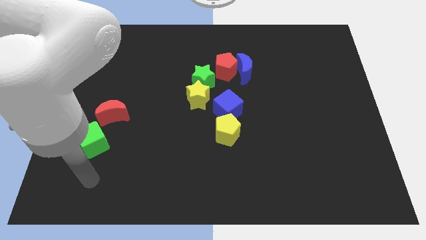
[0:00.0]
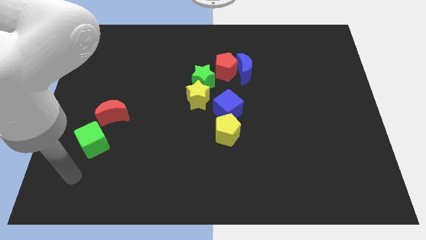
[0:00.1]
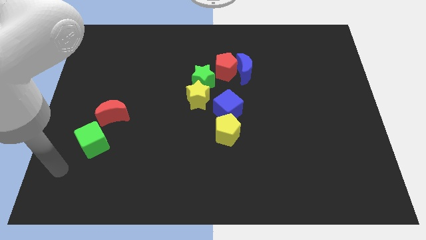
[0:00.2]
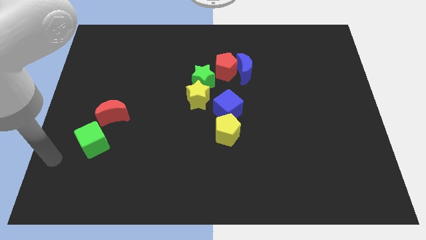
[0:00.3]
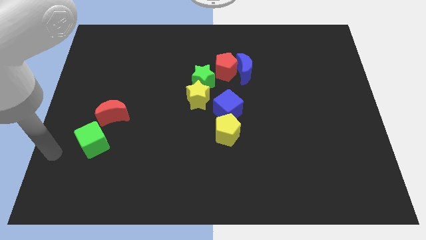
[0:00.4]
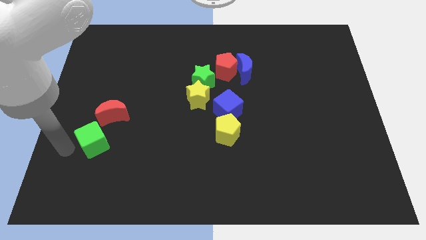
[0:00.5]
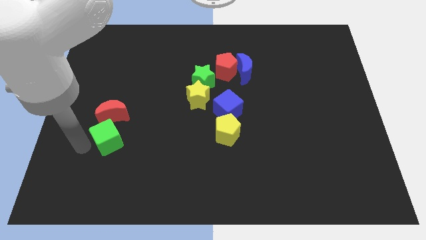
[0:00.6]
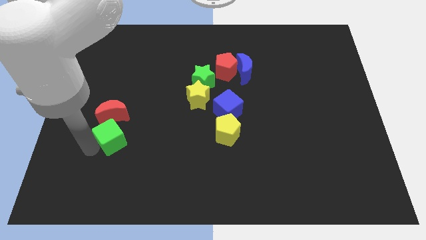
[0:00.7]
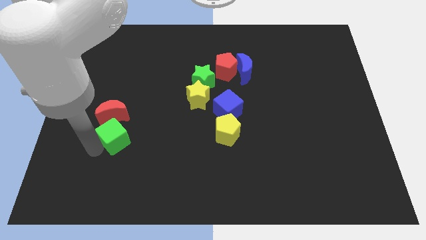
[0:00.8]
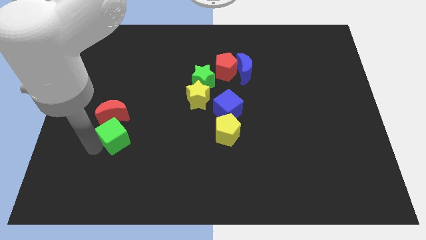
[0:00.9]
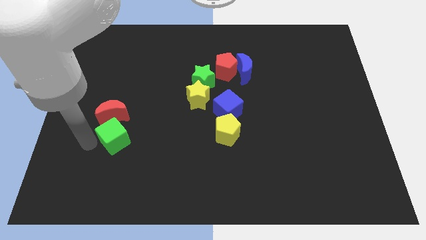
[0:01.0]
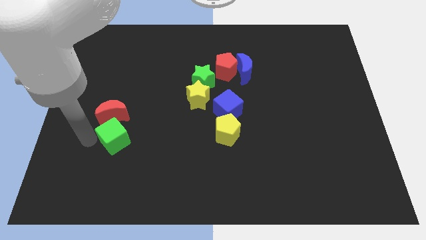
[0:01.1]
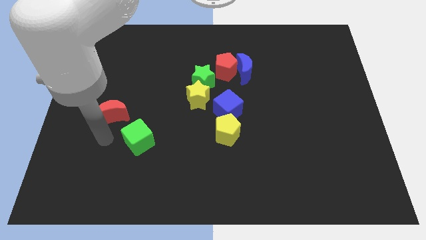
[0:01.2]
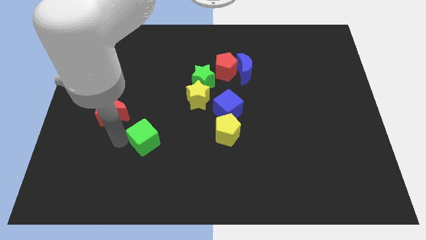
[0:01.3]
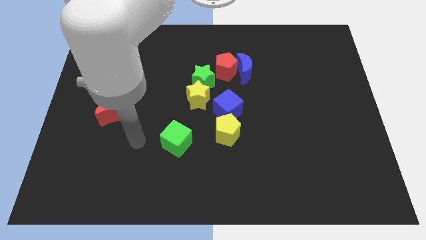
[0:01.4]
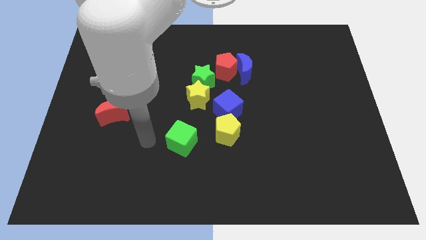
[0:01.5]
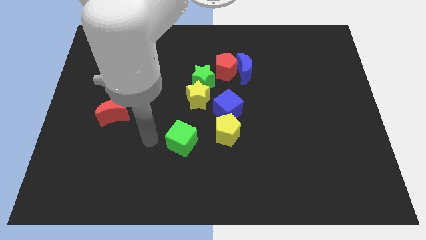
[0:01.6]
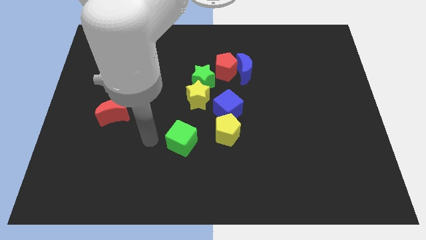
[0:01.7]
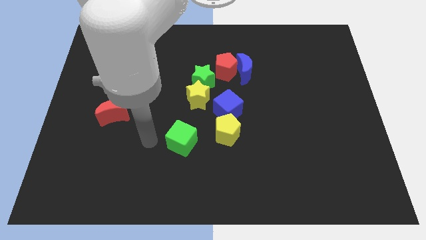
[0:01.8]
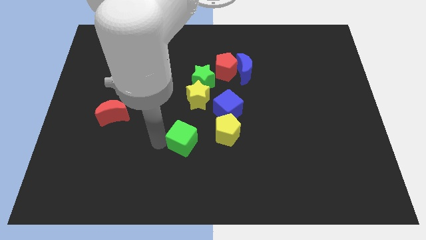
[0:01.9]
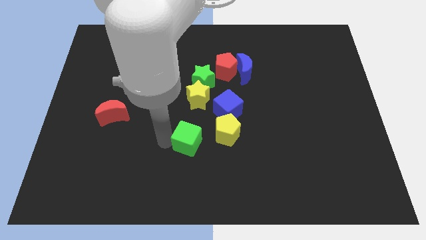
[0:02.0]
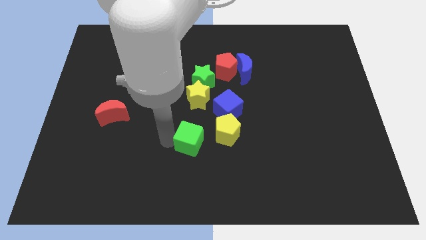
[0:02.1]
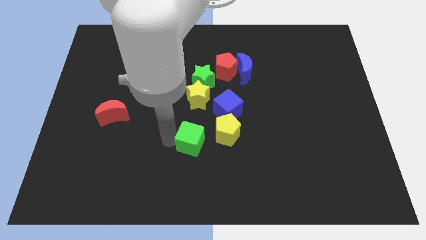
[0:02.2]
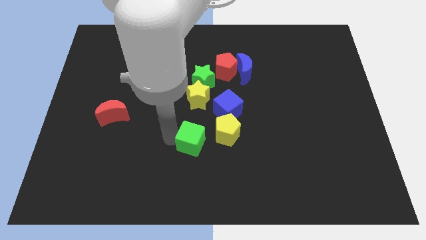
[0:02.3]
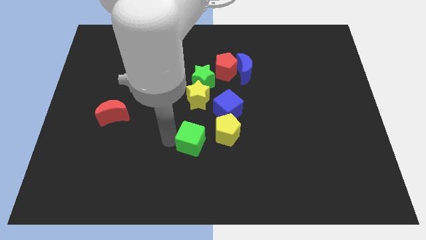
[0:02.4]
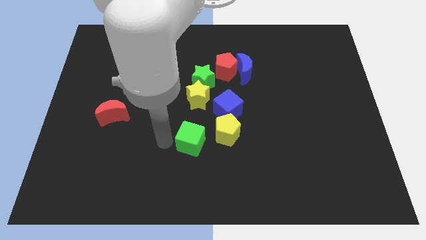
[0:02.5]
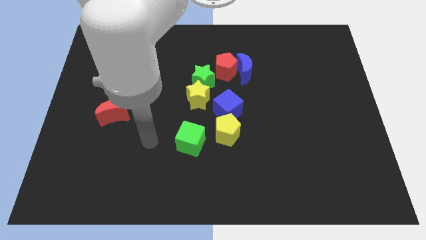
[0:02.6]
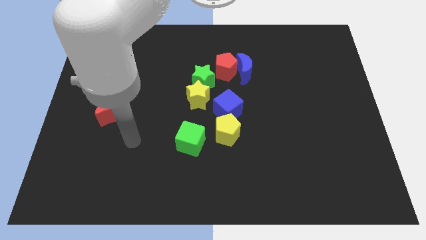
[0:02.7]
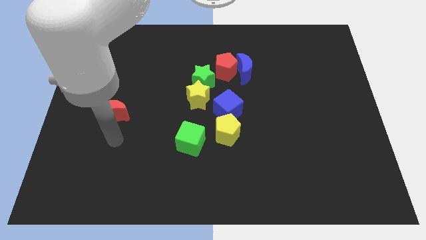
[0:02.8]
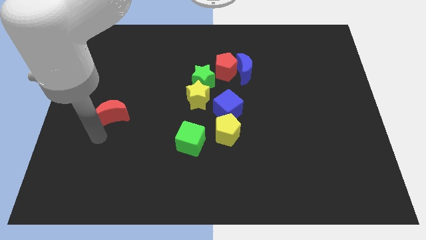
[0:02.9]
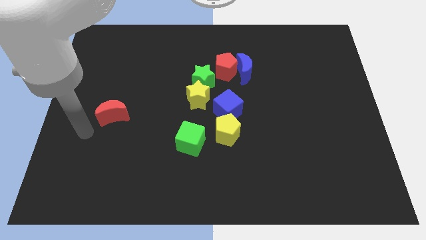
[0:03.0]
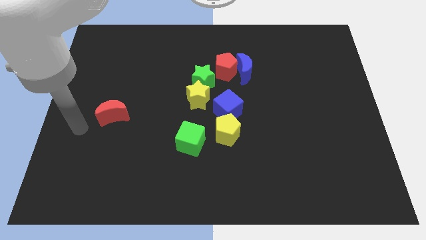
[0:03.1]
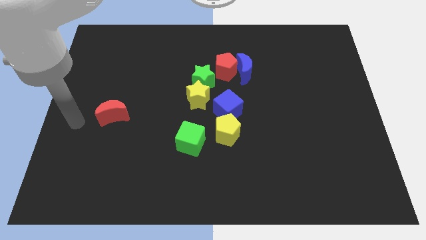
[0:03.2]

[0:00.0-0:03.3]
move the green cube towards the yellow pentagon

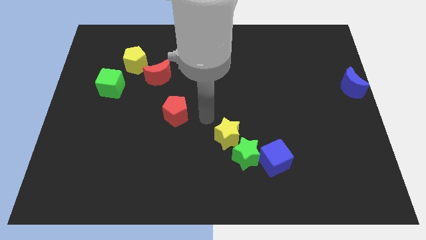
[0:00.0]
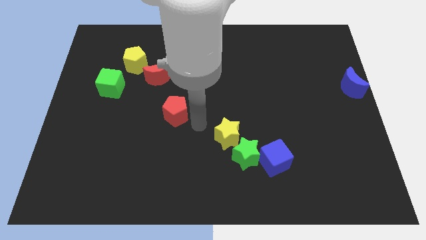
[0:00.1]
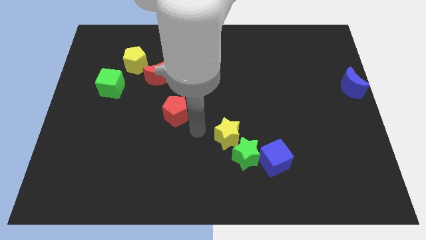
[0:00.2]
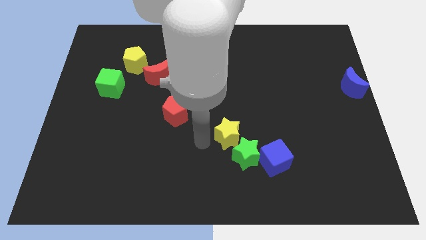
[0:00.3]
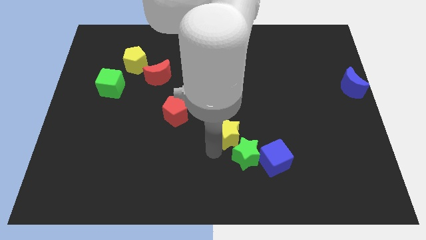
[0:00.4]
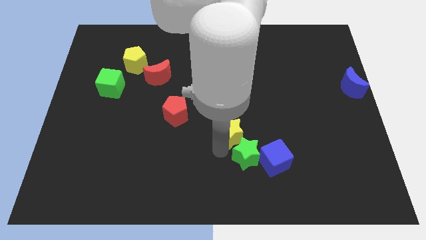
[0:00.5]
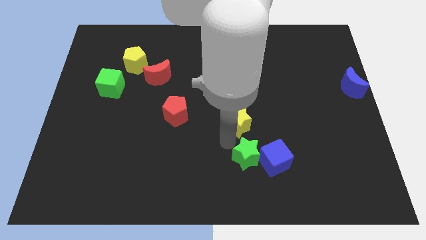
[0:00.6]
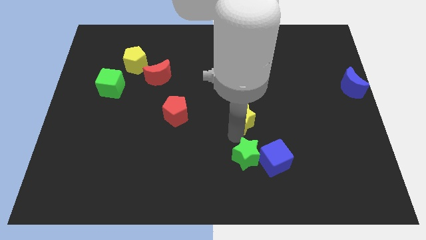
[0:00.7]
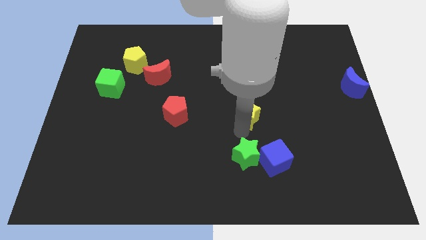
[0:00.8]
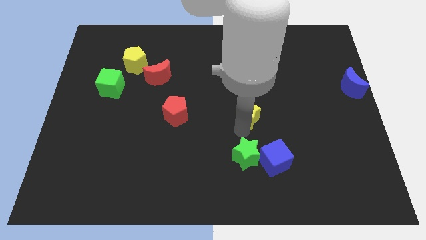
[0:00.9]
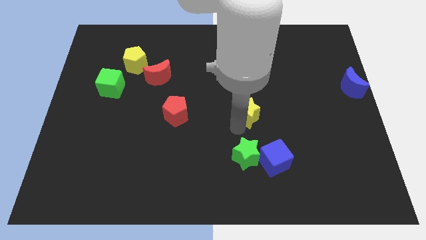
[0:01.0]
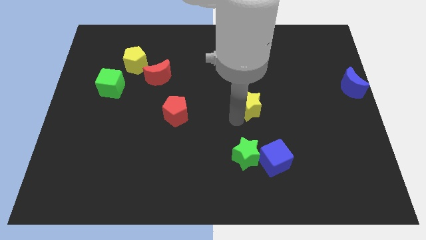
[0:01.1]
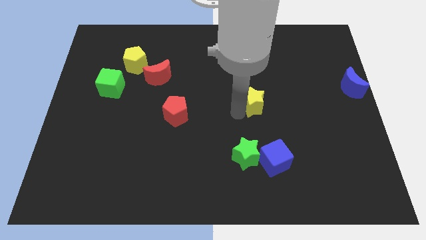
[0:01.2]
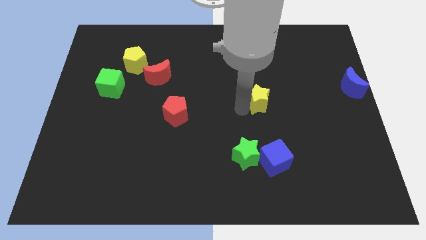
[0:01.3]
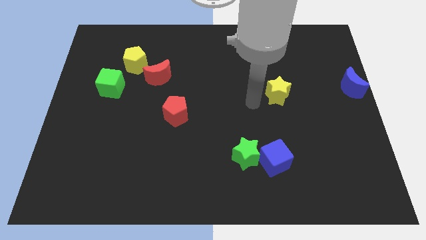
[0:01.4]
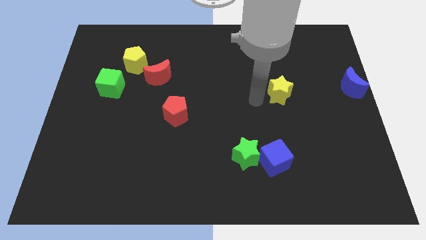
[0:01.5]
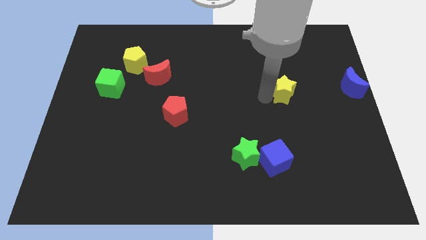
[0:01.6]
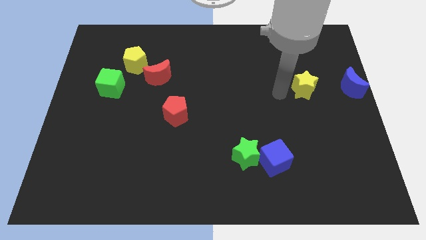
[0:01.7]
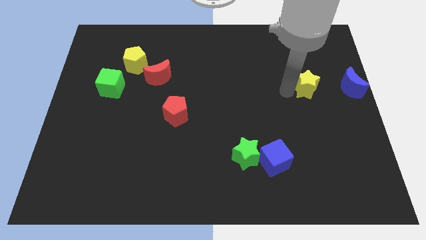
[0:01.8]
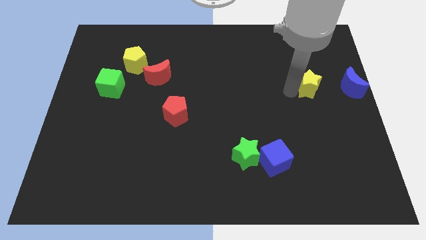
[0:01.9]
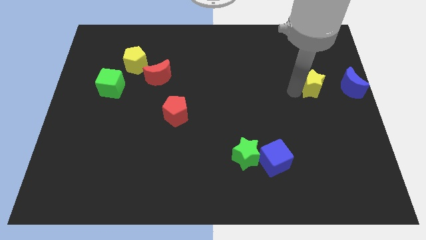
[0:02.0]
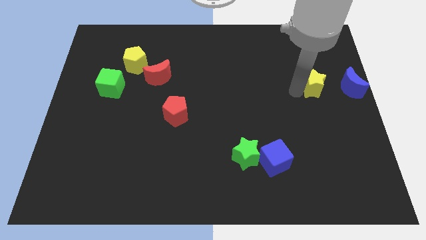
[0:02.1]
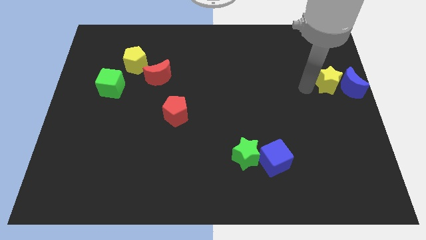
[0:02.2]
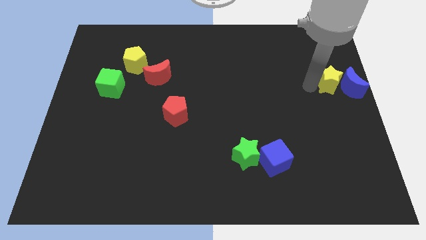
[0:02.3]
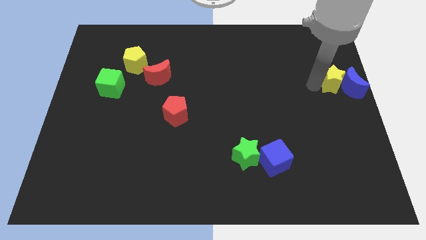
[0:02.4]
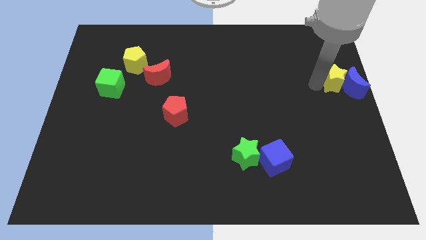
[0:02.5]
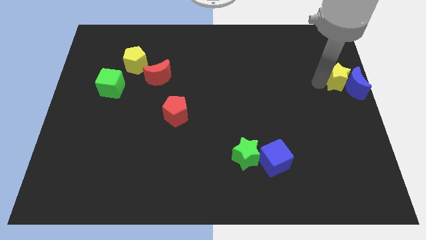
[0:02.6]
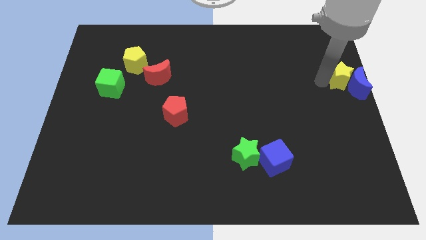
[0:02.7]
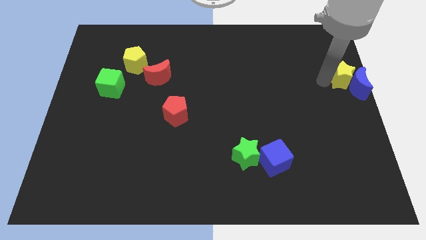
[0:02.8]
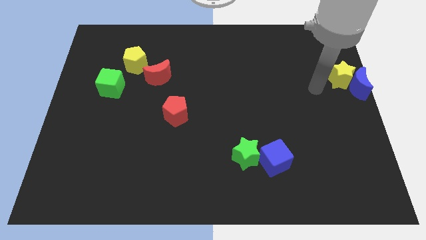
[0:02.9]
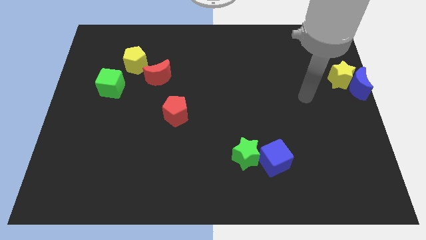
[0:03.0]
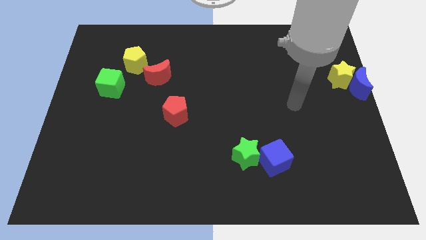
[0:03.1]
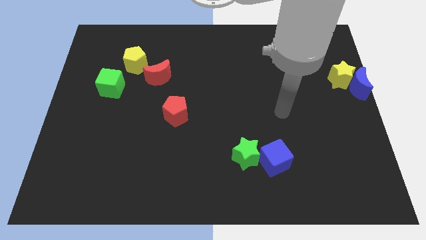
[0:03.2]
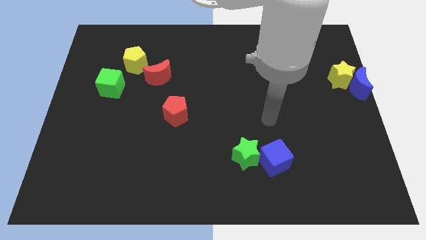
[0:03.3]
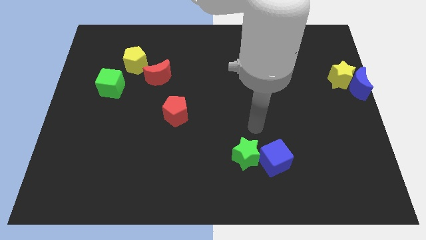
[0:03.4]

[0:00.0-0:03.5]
move the yellow star to the left of the blue crescent

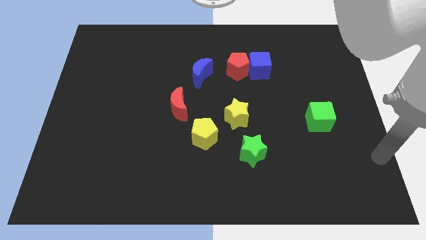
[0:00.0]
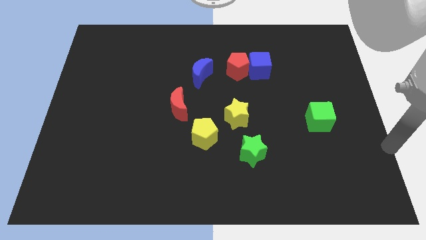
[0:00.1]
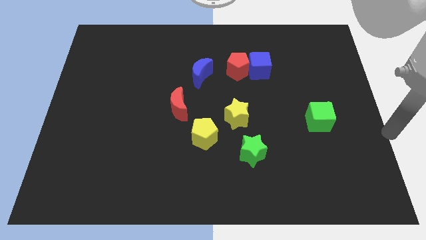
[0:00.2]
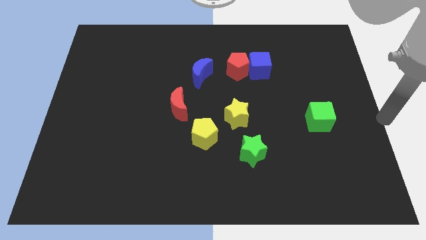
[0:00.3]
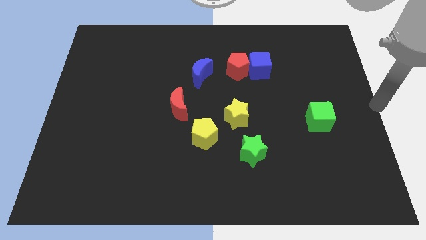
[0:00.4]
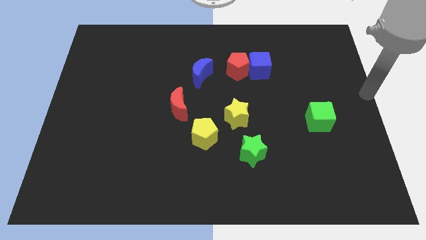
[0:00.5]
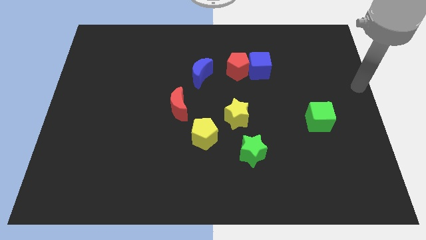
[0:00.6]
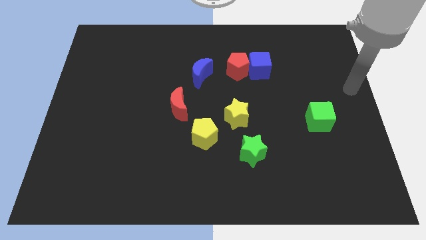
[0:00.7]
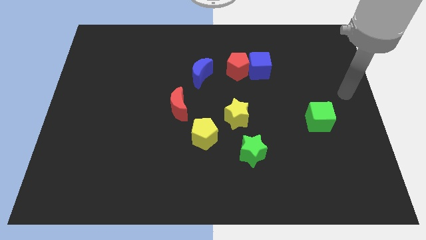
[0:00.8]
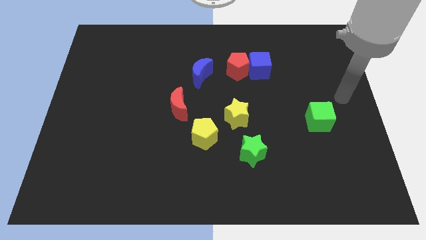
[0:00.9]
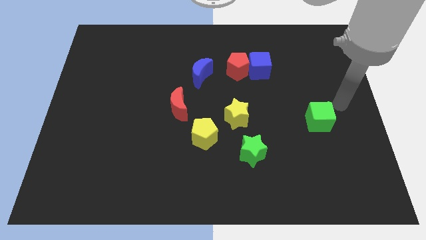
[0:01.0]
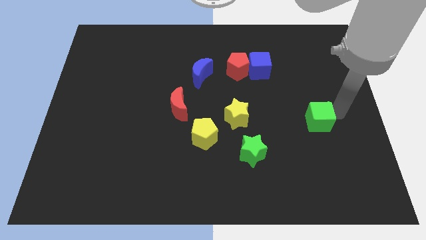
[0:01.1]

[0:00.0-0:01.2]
move arm towards green cube

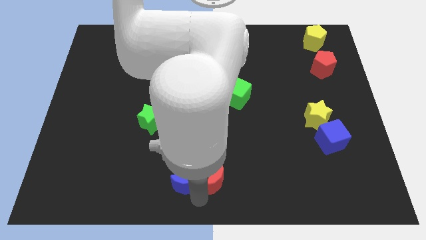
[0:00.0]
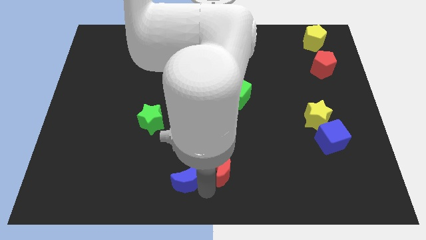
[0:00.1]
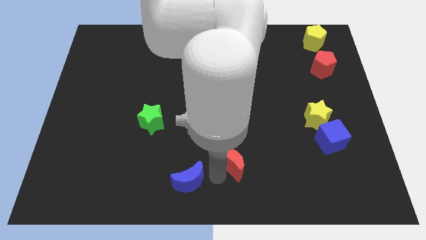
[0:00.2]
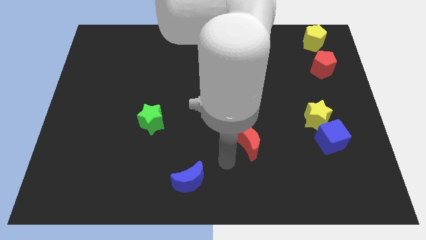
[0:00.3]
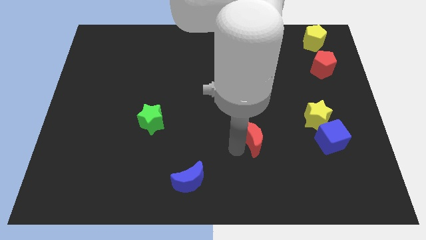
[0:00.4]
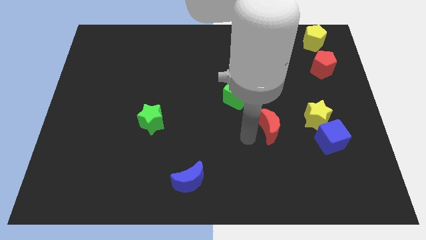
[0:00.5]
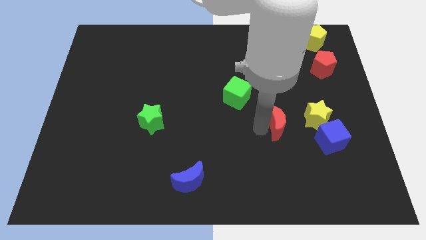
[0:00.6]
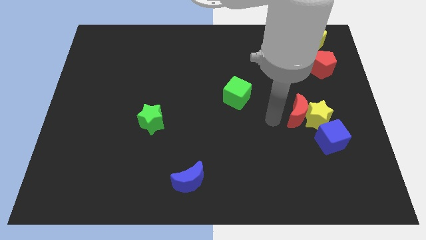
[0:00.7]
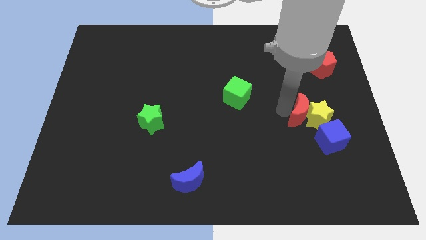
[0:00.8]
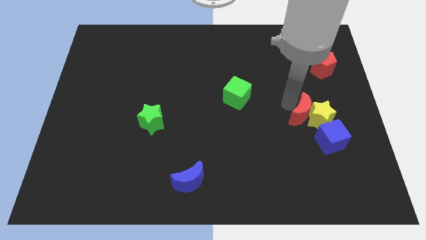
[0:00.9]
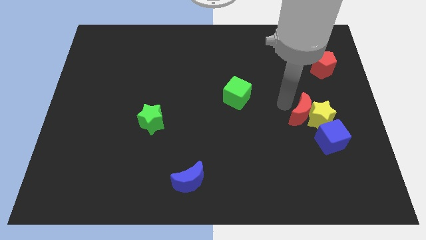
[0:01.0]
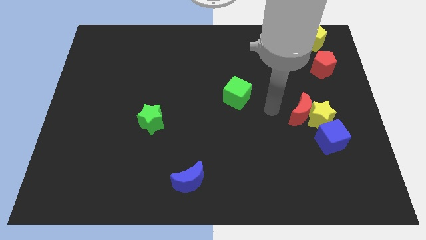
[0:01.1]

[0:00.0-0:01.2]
push the red crescent into the yellow star
